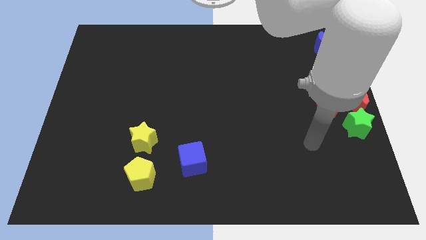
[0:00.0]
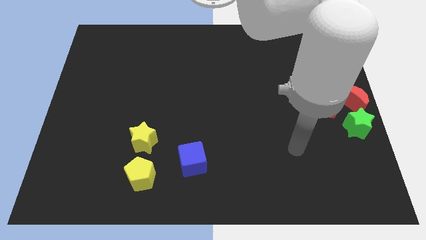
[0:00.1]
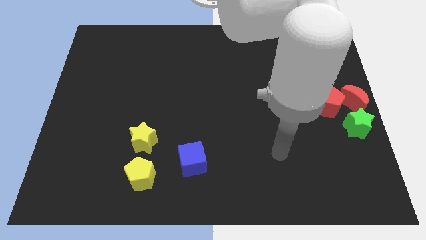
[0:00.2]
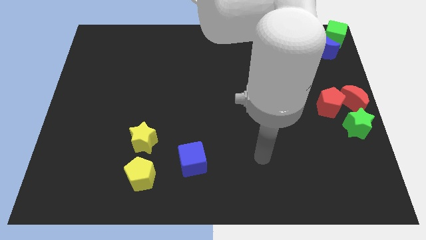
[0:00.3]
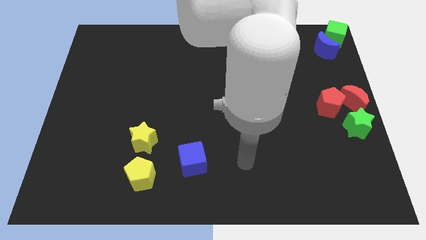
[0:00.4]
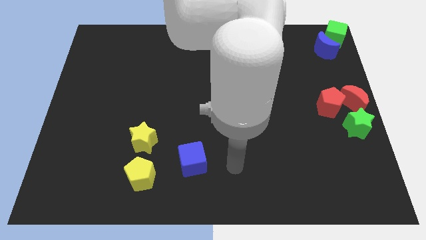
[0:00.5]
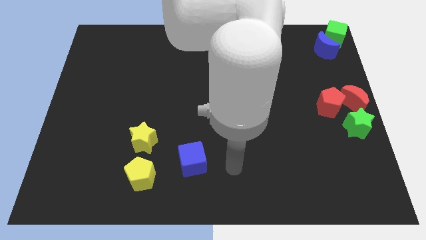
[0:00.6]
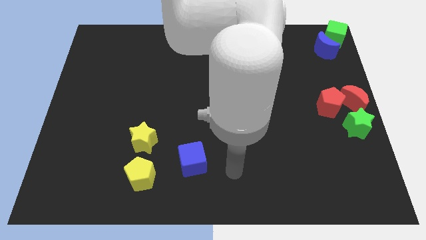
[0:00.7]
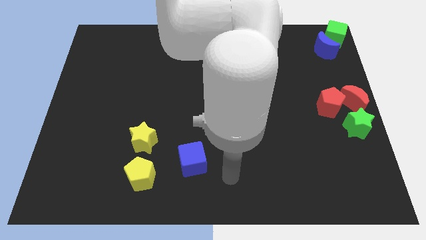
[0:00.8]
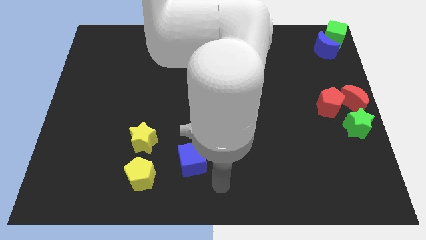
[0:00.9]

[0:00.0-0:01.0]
move your hand towards the bottom center

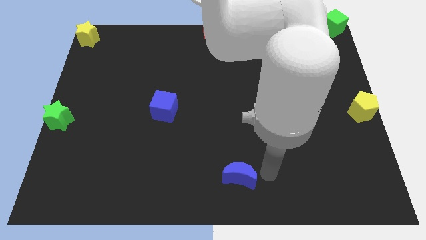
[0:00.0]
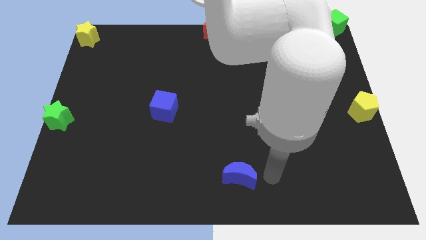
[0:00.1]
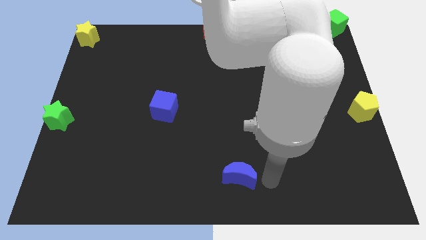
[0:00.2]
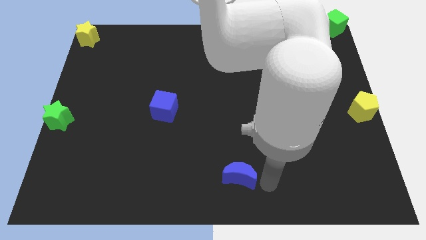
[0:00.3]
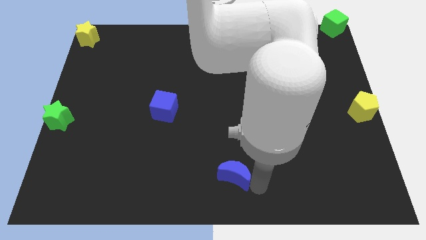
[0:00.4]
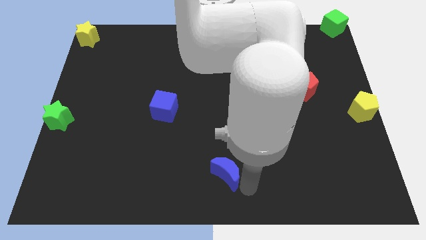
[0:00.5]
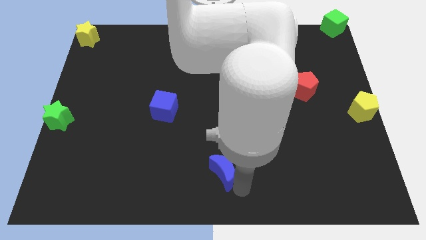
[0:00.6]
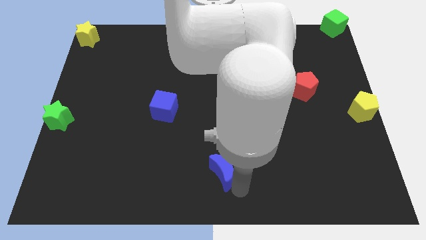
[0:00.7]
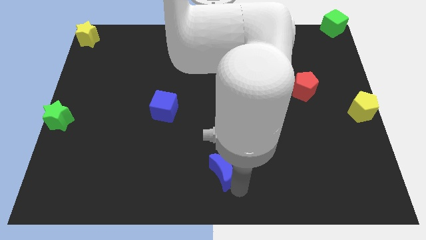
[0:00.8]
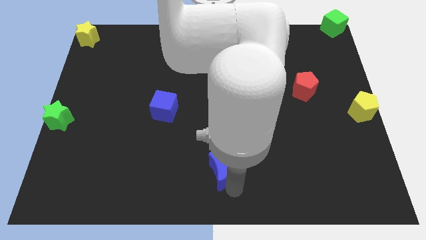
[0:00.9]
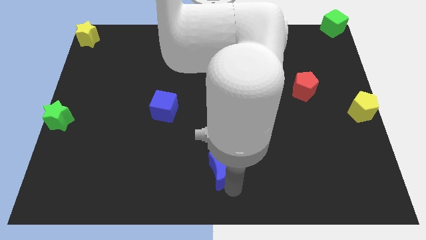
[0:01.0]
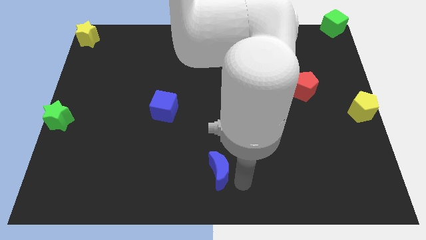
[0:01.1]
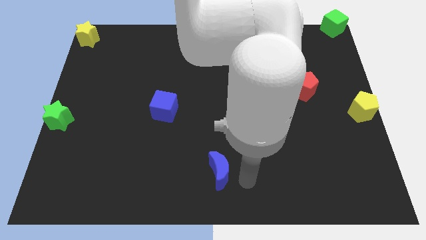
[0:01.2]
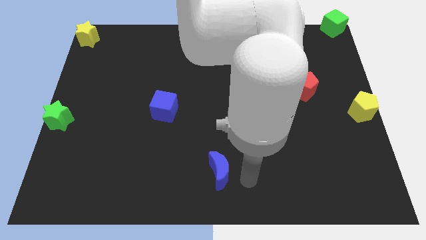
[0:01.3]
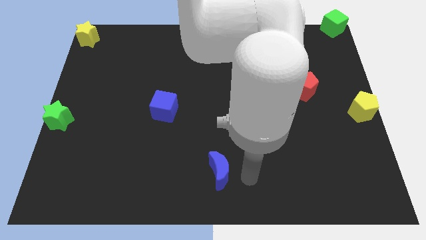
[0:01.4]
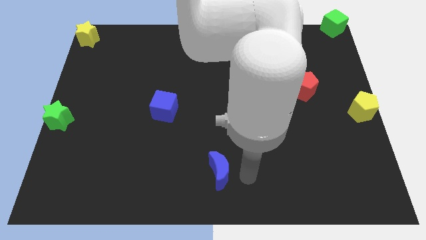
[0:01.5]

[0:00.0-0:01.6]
put the blue moon diagonally to blue cube

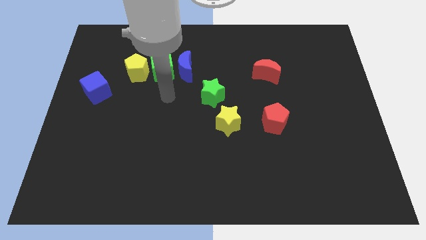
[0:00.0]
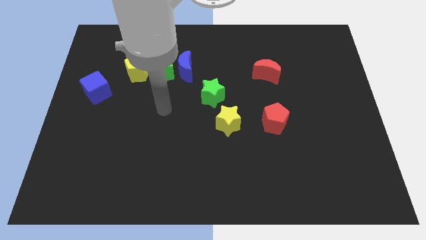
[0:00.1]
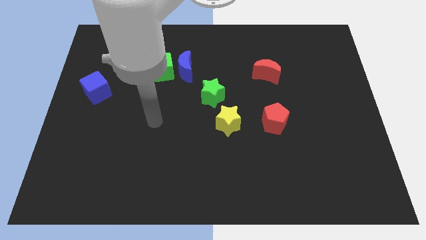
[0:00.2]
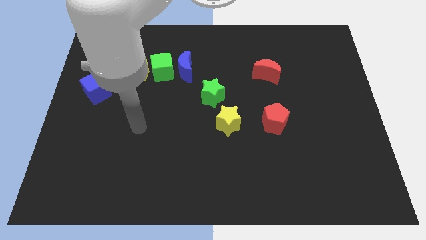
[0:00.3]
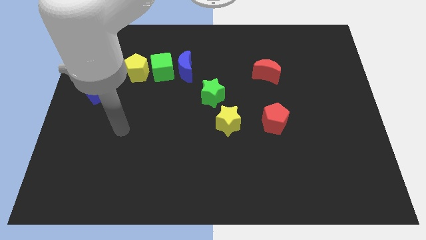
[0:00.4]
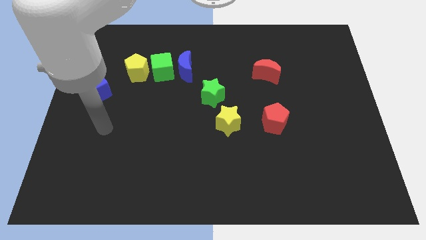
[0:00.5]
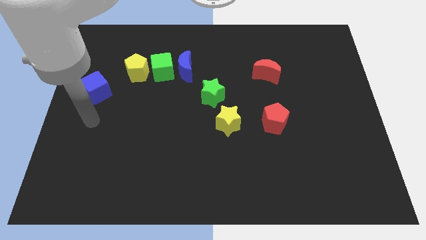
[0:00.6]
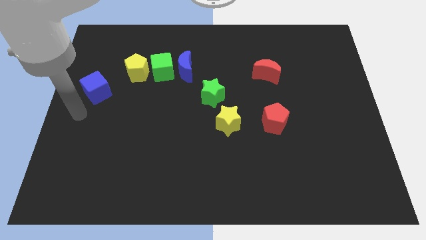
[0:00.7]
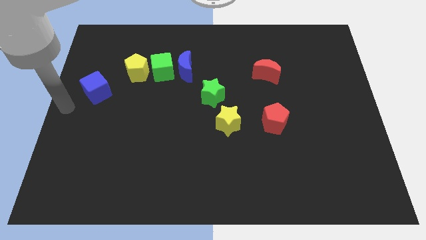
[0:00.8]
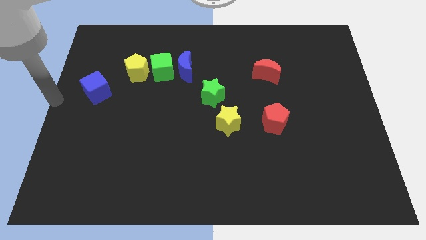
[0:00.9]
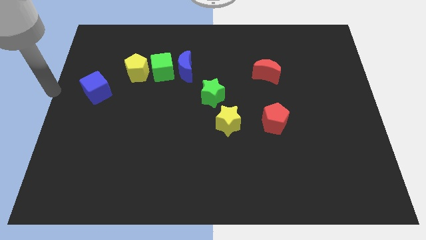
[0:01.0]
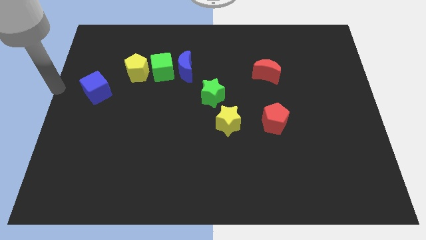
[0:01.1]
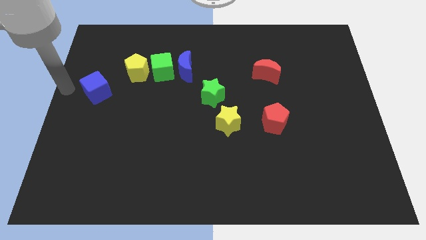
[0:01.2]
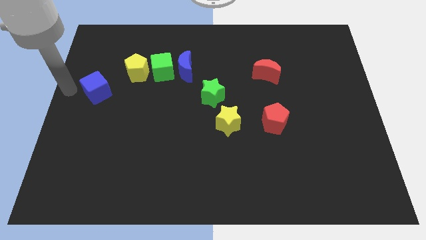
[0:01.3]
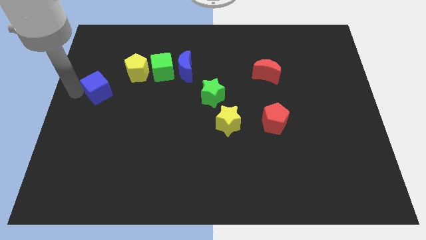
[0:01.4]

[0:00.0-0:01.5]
move your arm towards the blue cube

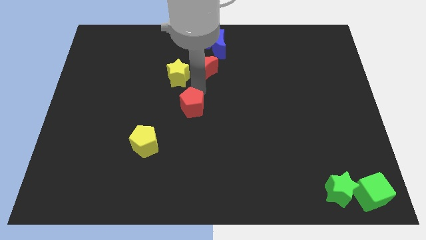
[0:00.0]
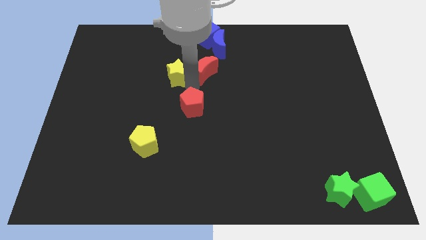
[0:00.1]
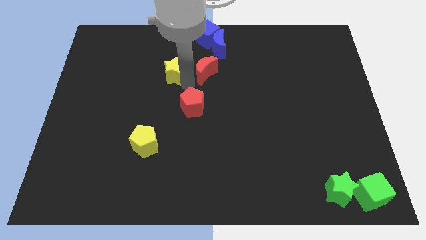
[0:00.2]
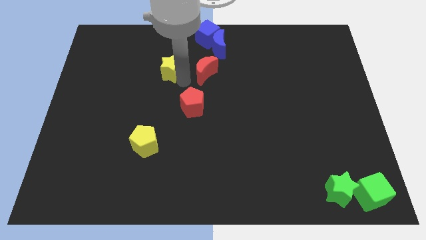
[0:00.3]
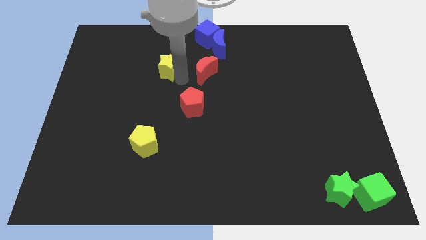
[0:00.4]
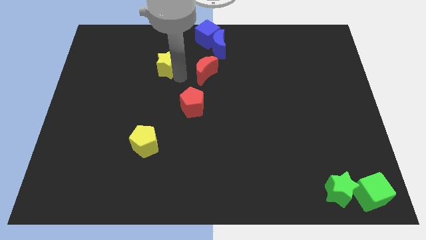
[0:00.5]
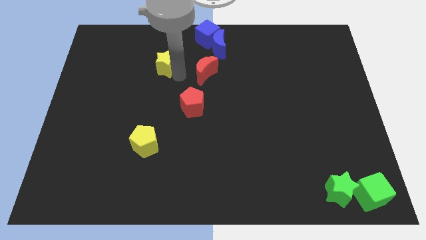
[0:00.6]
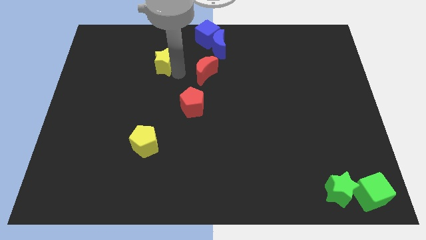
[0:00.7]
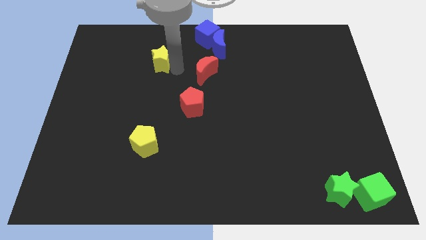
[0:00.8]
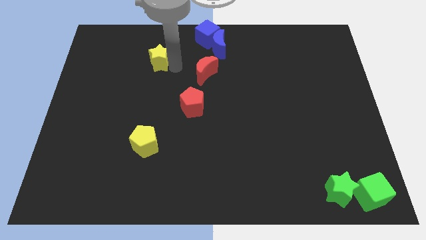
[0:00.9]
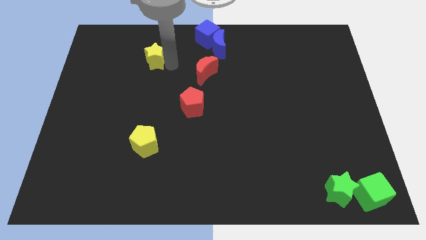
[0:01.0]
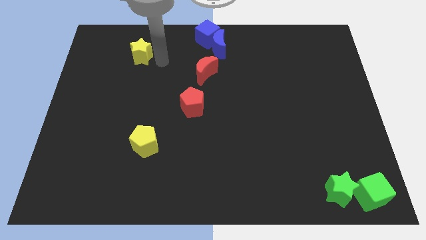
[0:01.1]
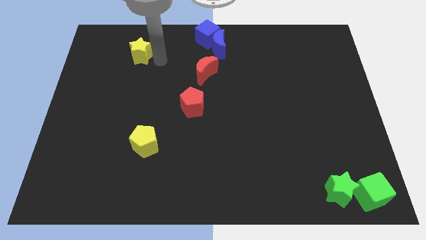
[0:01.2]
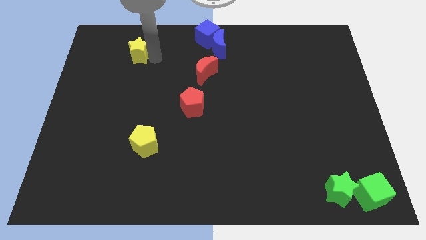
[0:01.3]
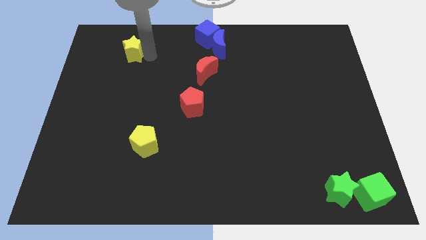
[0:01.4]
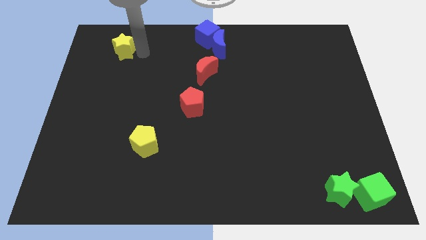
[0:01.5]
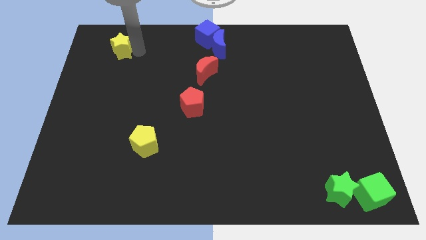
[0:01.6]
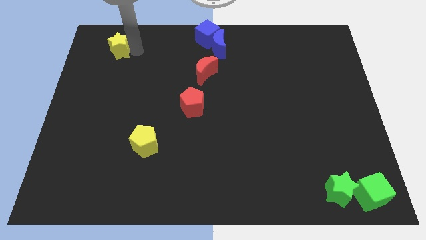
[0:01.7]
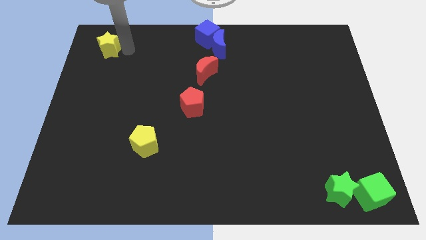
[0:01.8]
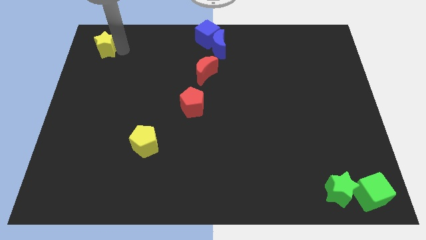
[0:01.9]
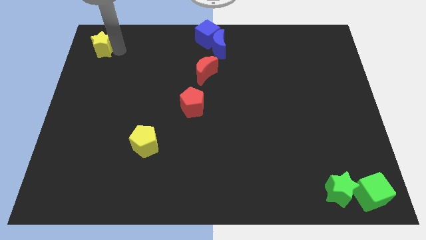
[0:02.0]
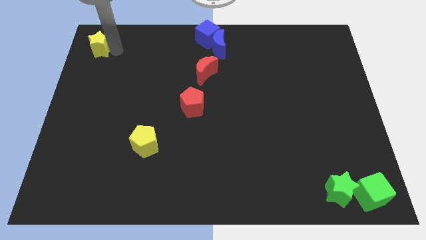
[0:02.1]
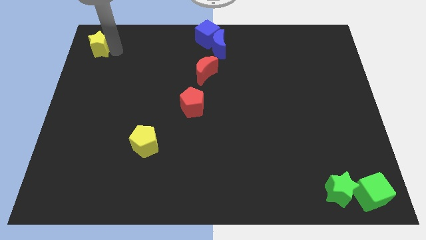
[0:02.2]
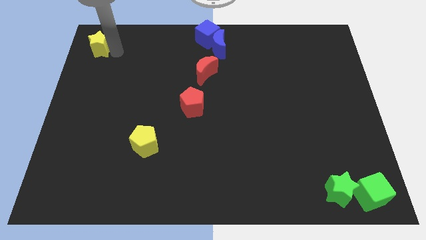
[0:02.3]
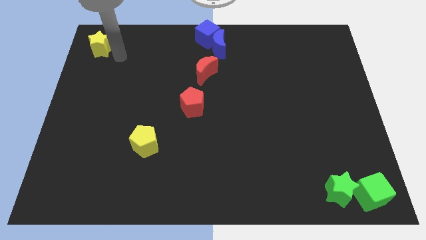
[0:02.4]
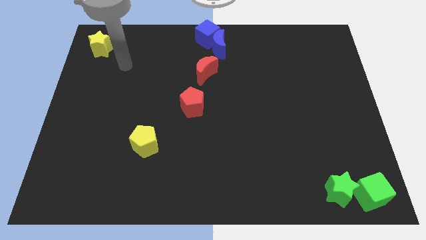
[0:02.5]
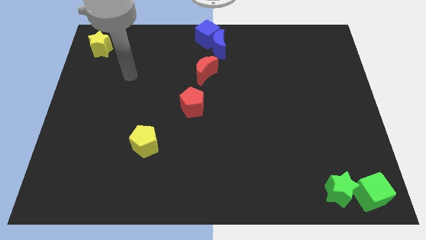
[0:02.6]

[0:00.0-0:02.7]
move the yellow star to the top left of the board

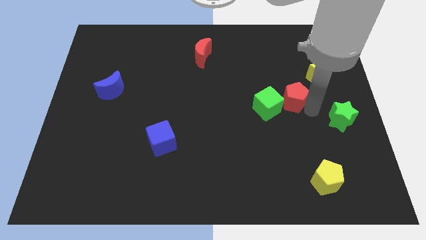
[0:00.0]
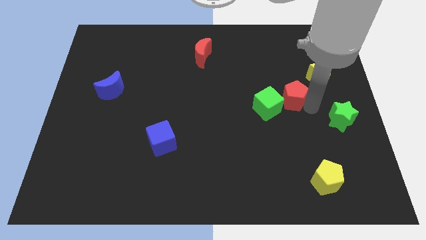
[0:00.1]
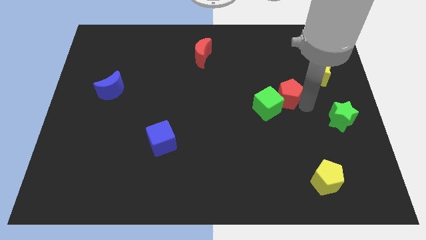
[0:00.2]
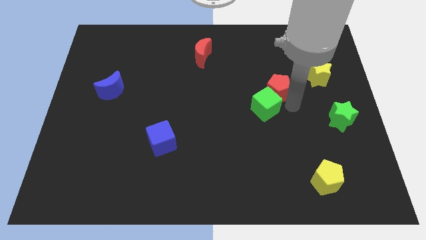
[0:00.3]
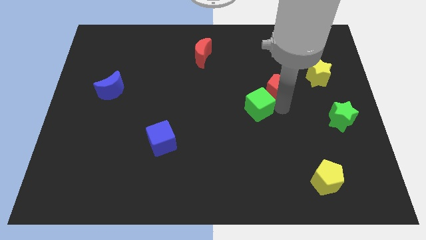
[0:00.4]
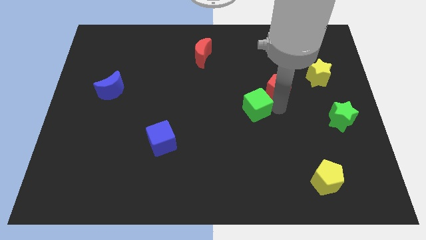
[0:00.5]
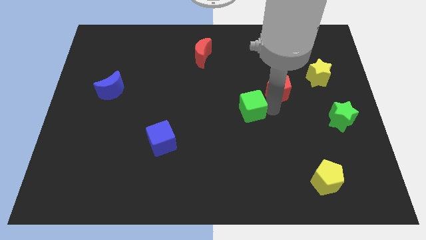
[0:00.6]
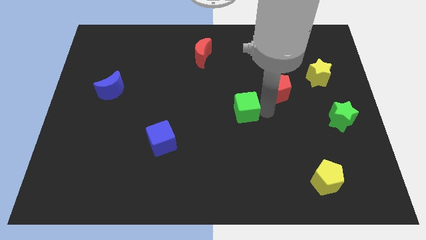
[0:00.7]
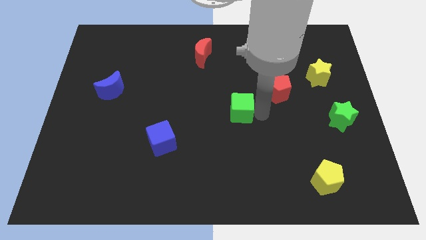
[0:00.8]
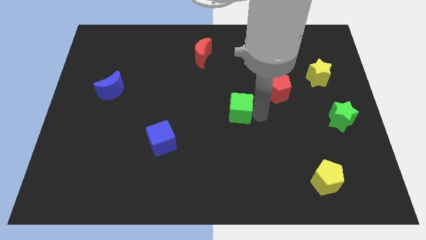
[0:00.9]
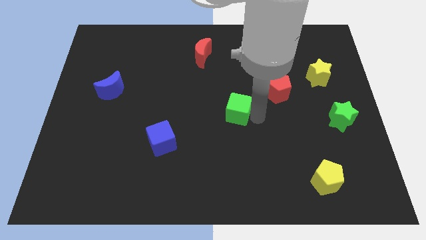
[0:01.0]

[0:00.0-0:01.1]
separate green cube from red pentagon

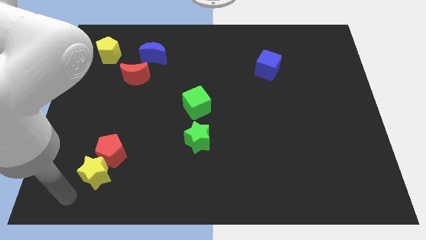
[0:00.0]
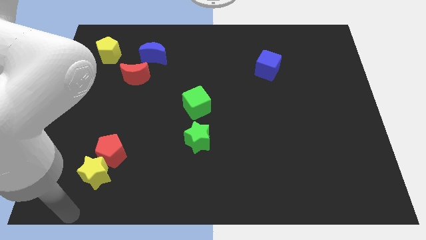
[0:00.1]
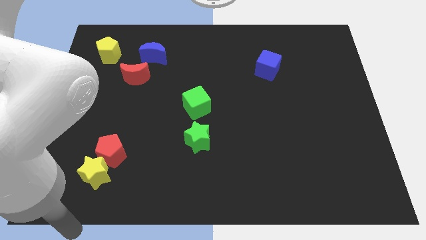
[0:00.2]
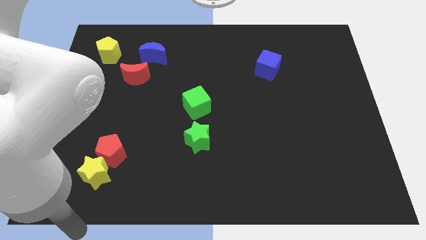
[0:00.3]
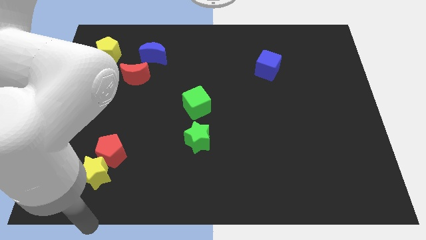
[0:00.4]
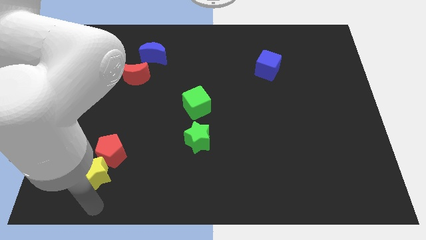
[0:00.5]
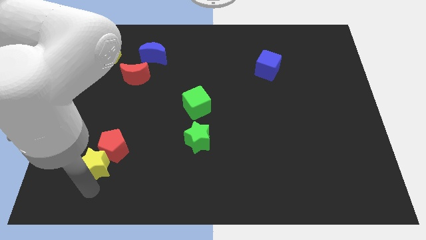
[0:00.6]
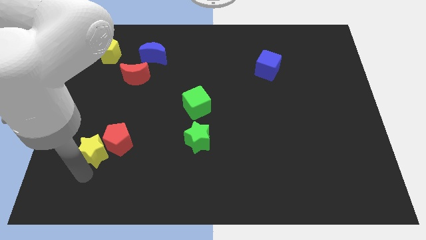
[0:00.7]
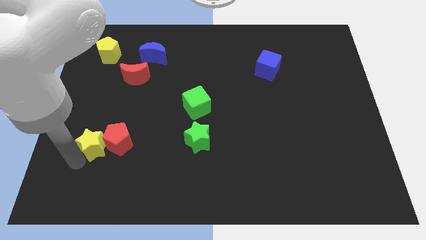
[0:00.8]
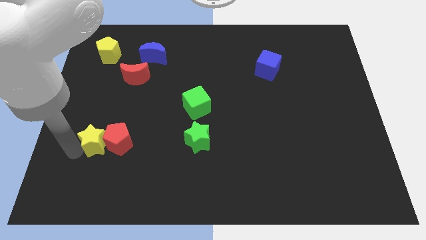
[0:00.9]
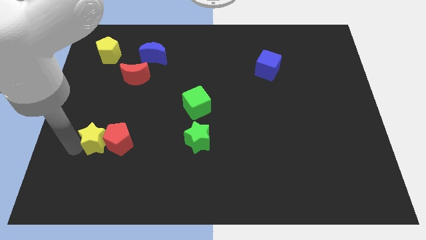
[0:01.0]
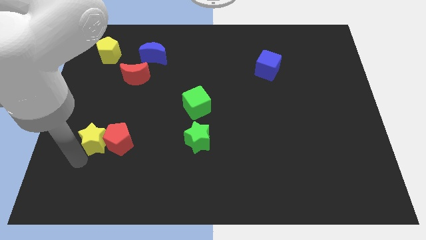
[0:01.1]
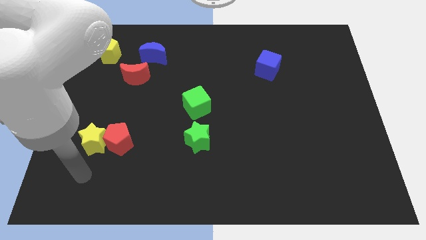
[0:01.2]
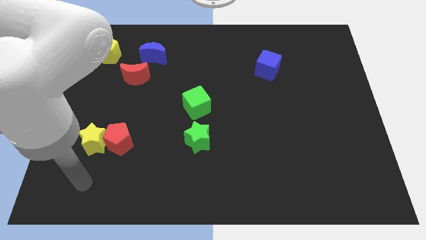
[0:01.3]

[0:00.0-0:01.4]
push the yellow star left to the red pentagon
